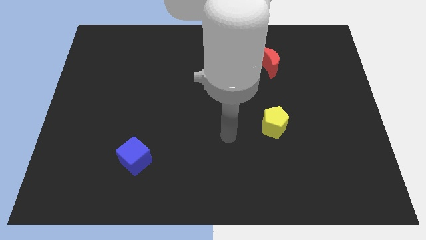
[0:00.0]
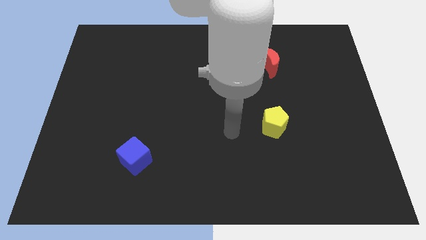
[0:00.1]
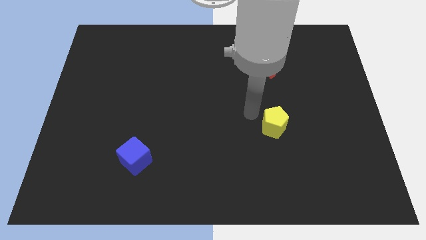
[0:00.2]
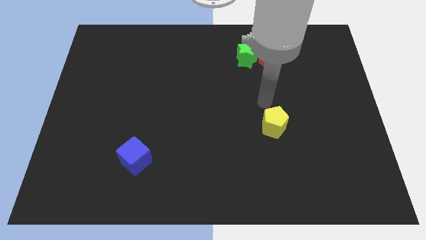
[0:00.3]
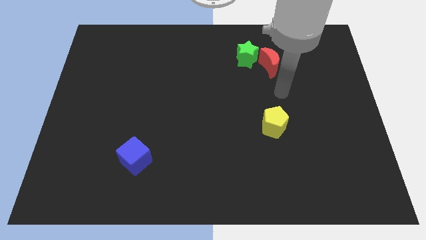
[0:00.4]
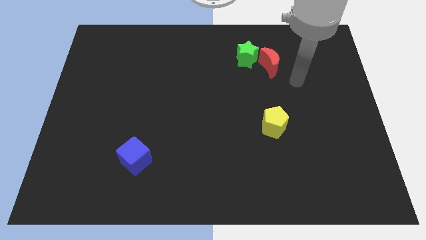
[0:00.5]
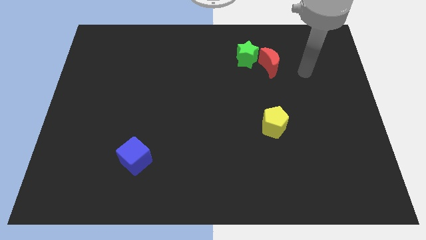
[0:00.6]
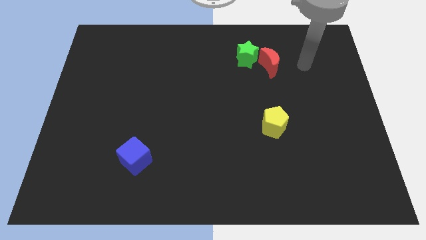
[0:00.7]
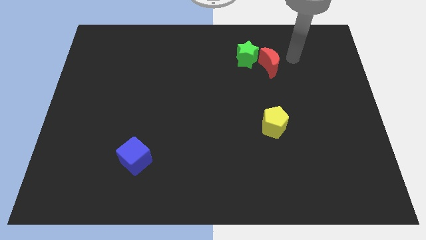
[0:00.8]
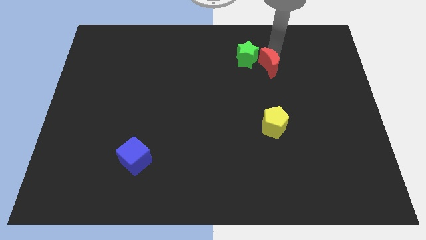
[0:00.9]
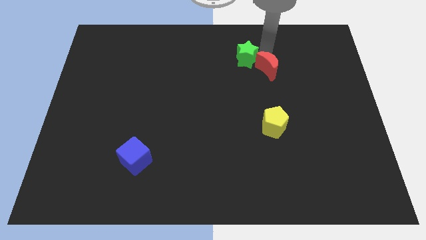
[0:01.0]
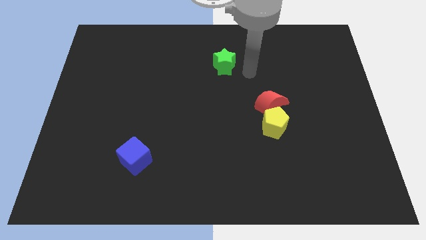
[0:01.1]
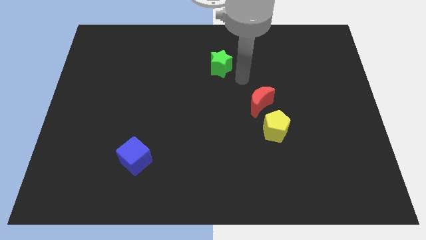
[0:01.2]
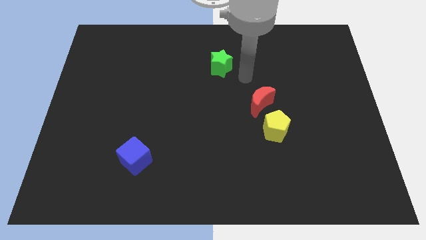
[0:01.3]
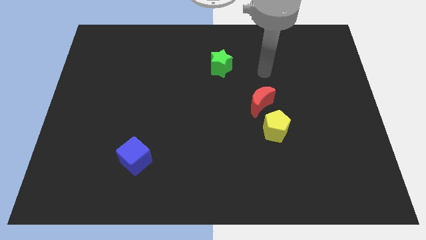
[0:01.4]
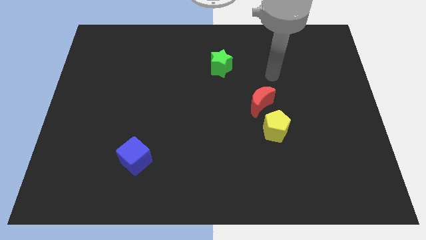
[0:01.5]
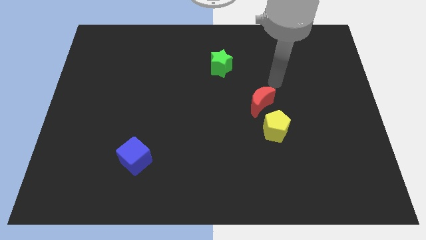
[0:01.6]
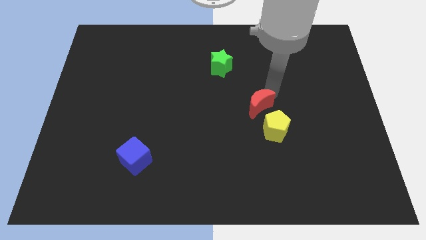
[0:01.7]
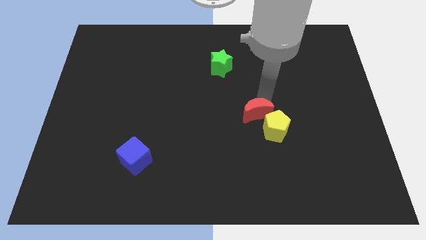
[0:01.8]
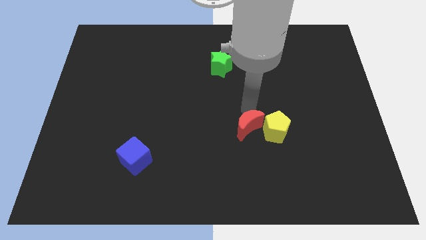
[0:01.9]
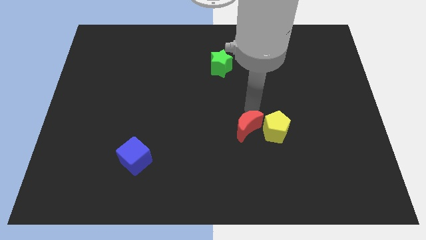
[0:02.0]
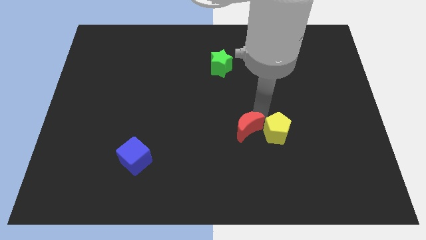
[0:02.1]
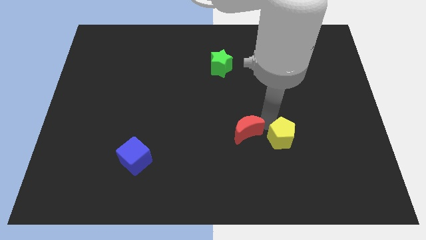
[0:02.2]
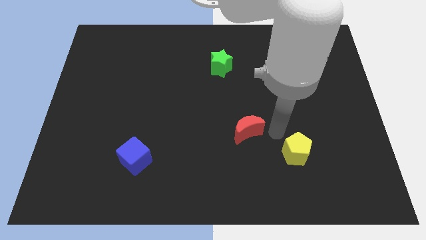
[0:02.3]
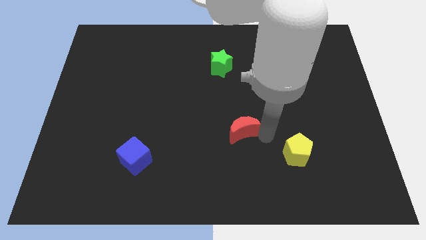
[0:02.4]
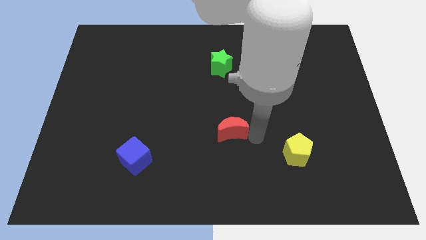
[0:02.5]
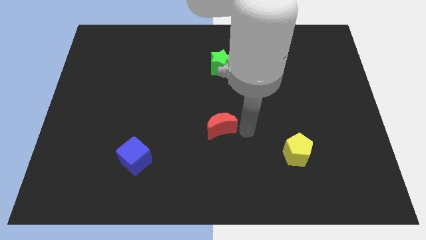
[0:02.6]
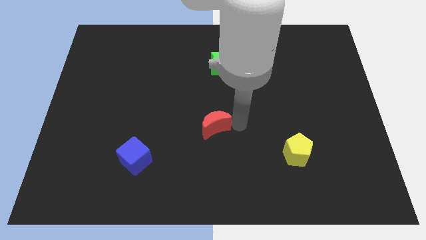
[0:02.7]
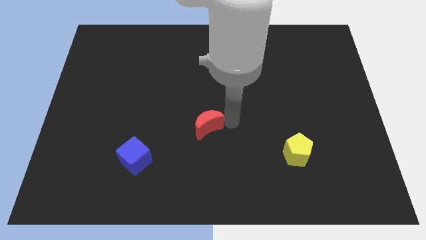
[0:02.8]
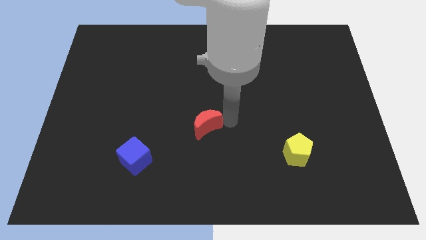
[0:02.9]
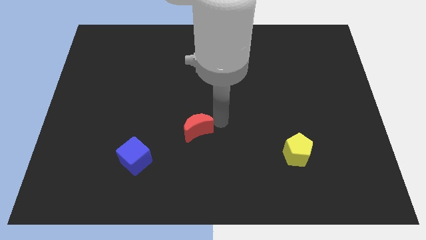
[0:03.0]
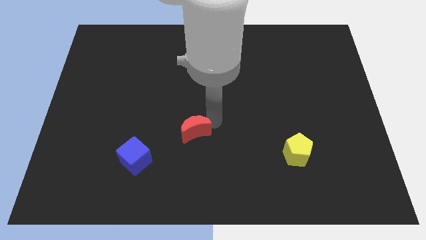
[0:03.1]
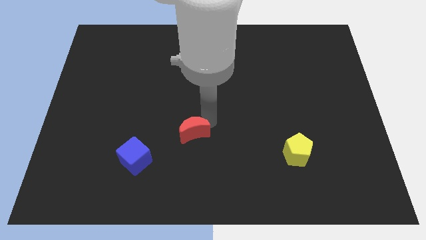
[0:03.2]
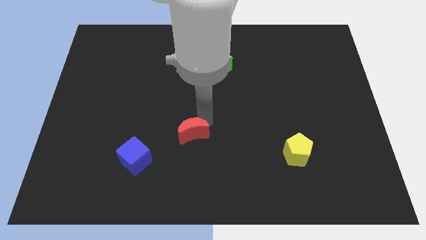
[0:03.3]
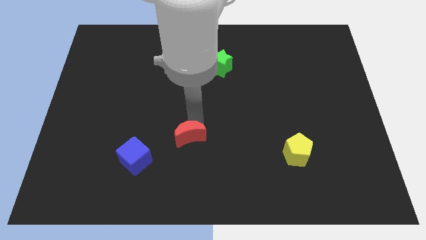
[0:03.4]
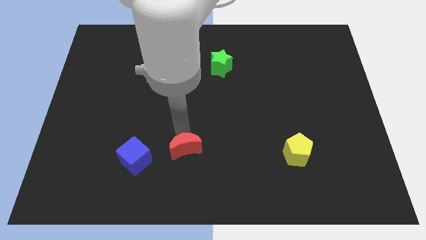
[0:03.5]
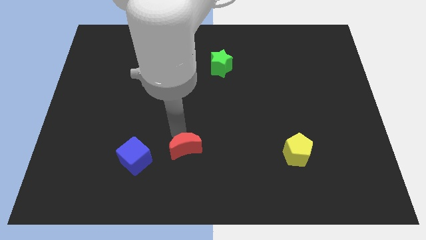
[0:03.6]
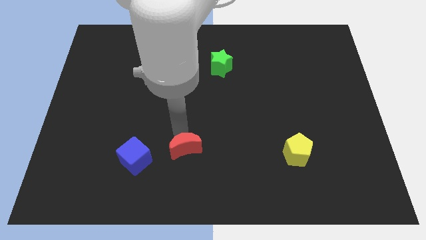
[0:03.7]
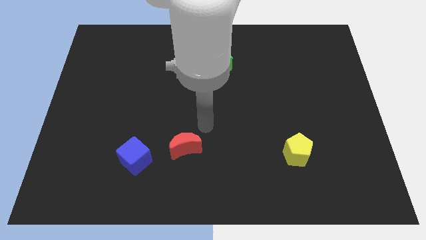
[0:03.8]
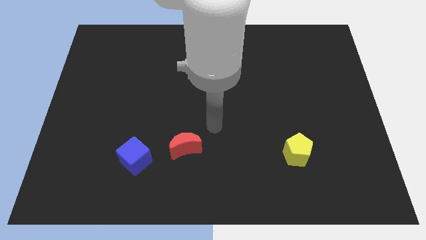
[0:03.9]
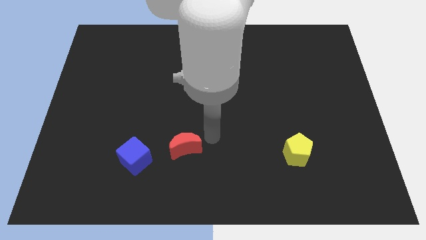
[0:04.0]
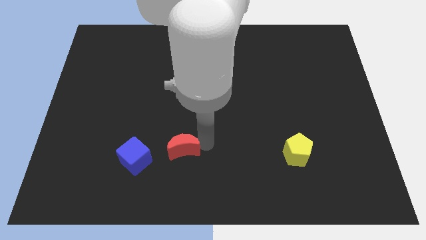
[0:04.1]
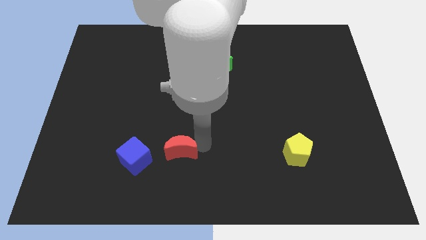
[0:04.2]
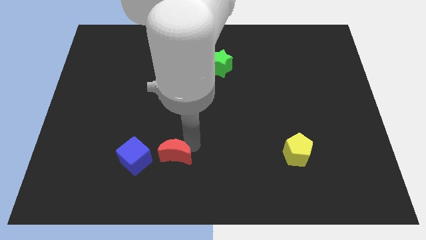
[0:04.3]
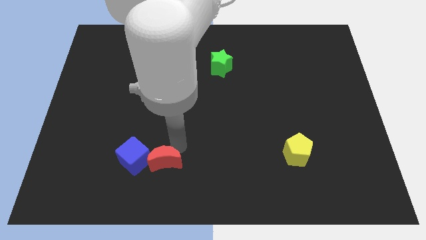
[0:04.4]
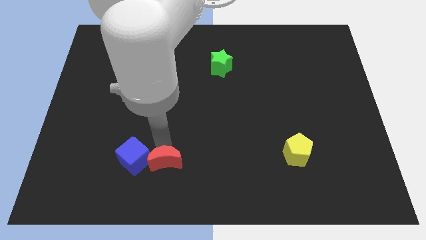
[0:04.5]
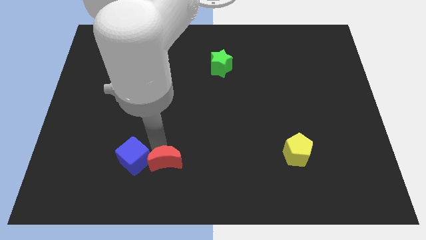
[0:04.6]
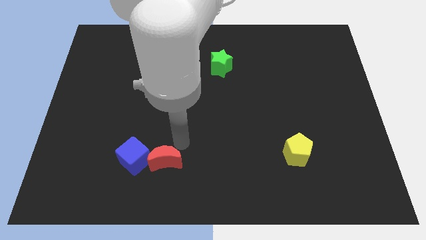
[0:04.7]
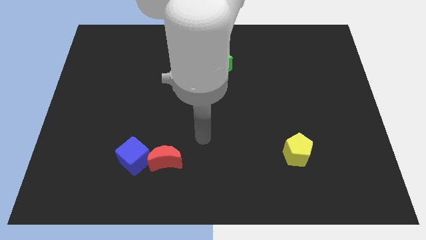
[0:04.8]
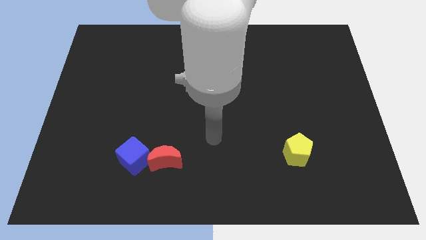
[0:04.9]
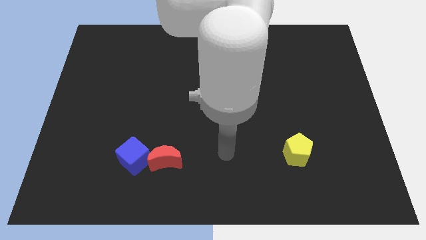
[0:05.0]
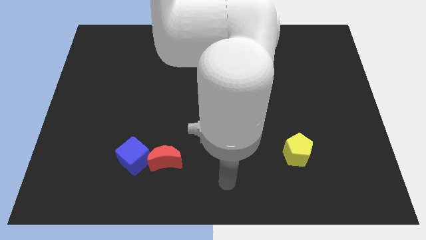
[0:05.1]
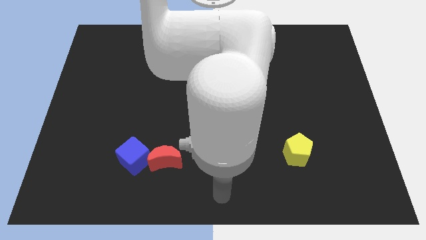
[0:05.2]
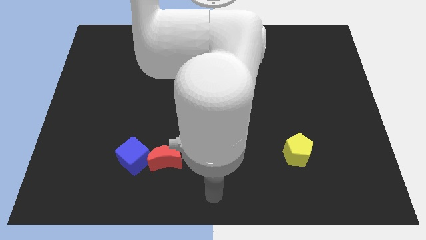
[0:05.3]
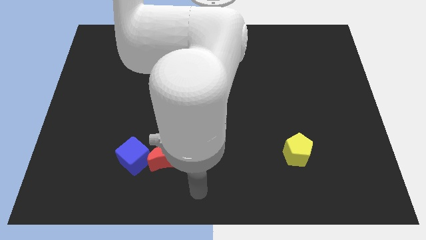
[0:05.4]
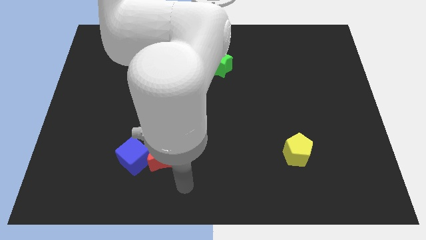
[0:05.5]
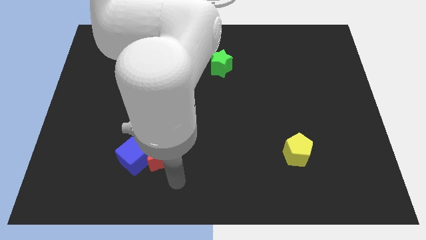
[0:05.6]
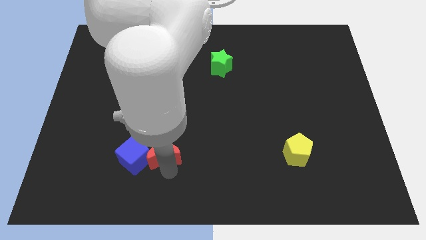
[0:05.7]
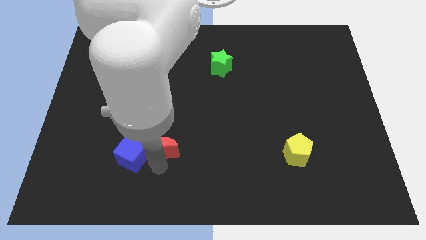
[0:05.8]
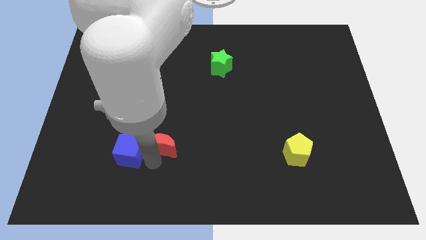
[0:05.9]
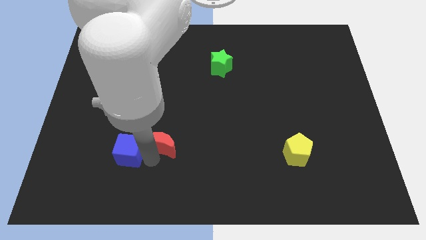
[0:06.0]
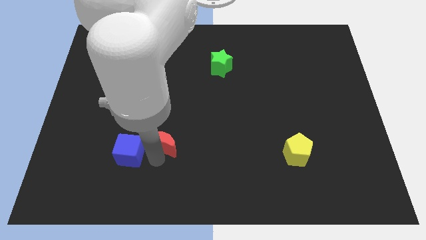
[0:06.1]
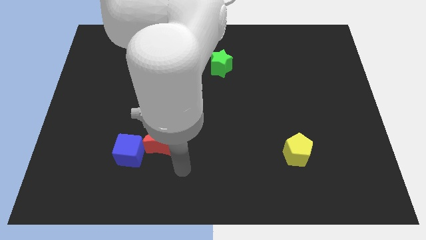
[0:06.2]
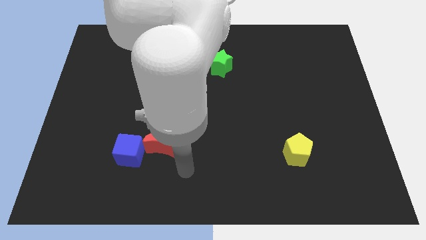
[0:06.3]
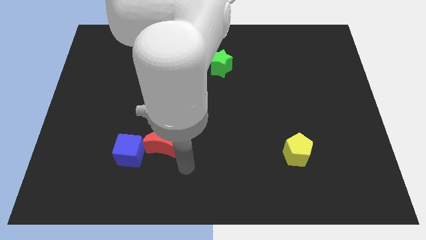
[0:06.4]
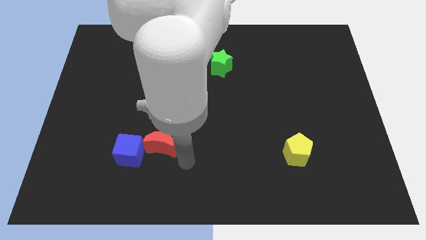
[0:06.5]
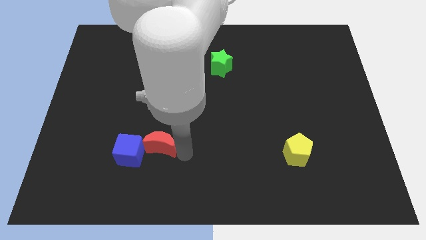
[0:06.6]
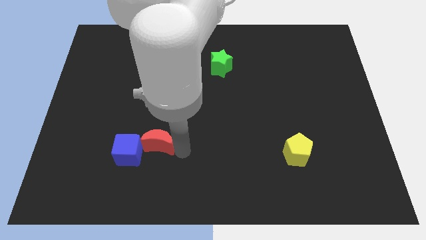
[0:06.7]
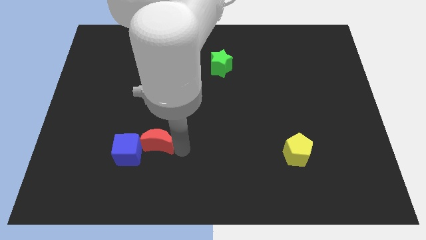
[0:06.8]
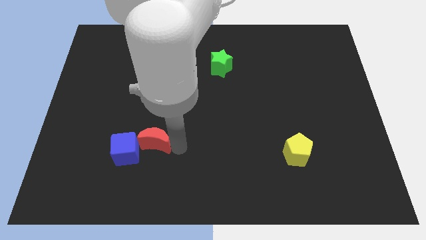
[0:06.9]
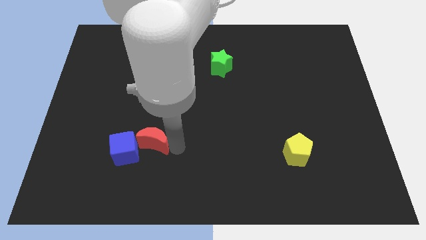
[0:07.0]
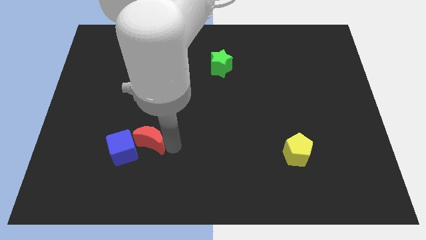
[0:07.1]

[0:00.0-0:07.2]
push the red moon to the cube

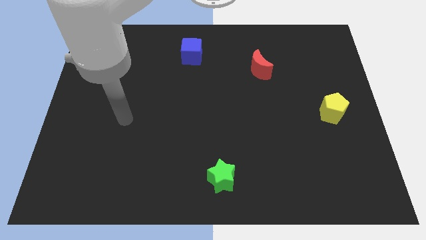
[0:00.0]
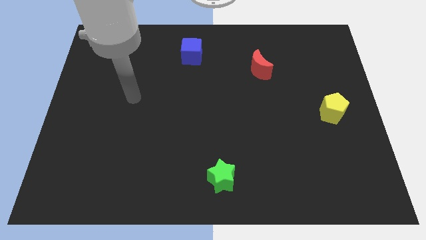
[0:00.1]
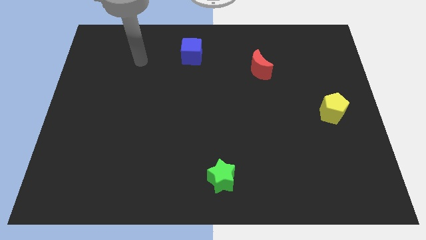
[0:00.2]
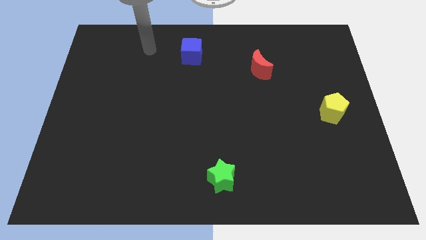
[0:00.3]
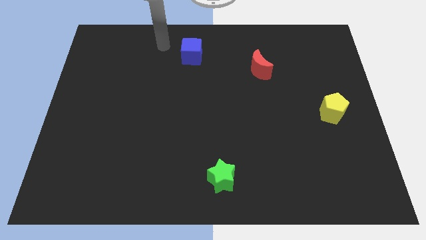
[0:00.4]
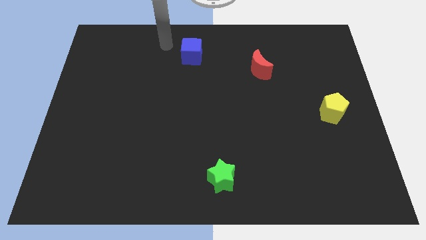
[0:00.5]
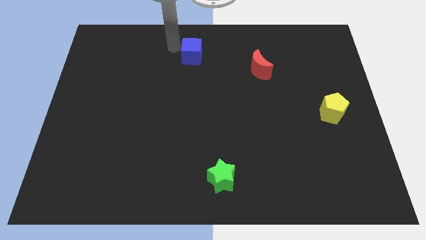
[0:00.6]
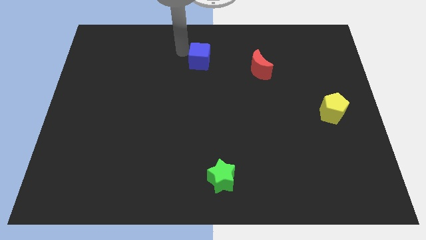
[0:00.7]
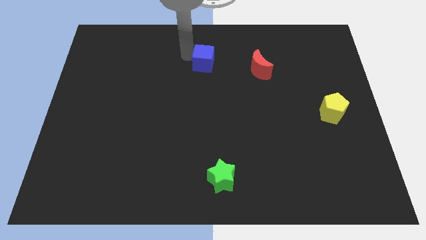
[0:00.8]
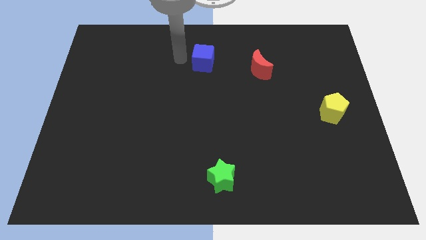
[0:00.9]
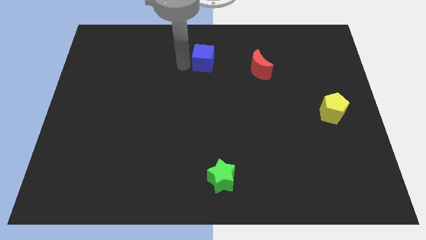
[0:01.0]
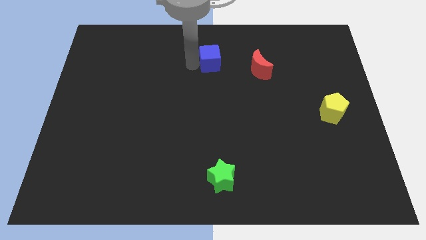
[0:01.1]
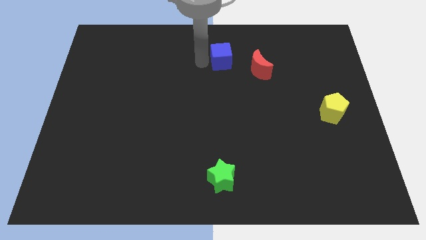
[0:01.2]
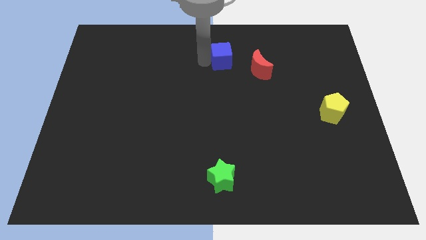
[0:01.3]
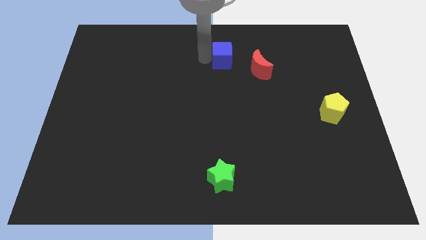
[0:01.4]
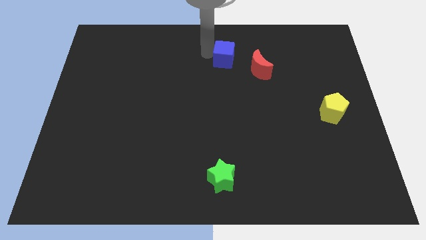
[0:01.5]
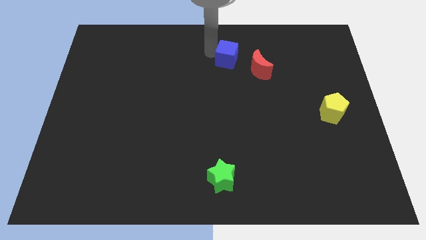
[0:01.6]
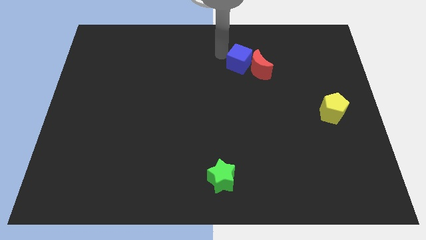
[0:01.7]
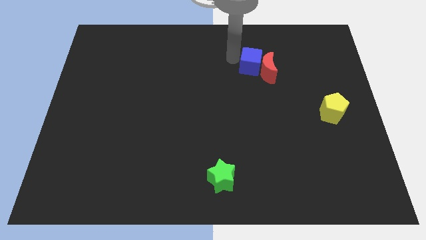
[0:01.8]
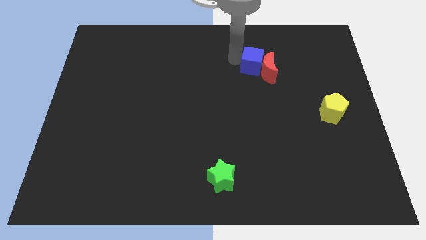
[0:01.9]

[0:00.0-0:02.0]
push the blue block close to the red block
